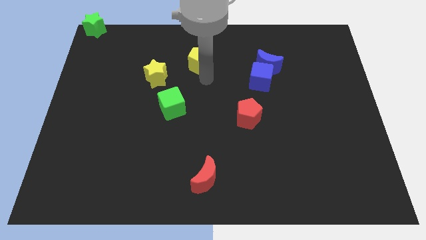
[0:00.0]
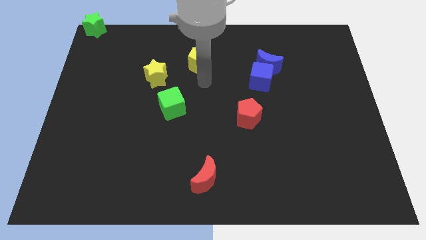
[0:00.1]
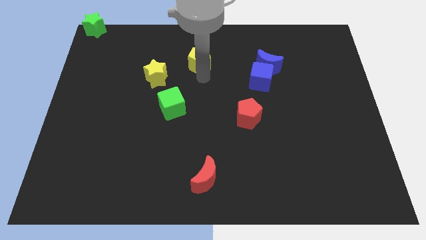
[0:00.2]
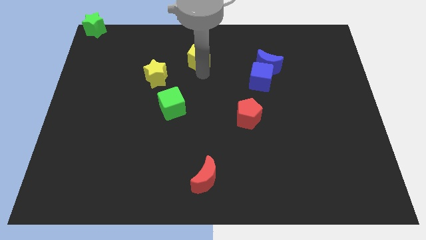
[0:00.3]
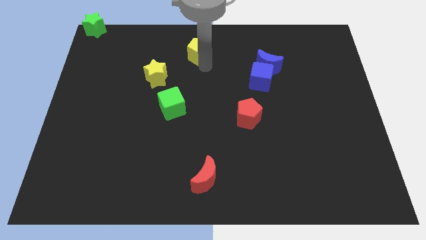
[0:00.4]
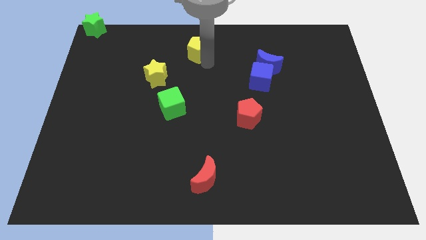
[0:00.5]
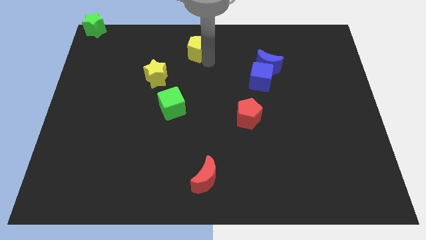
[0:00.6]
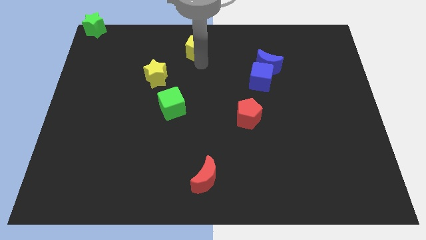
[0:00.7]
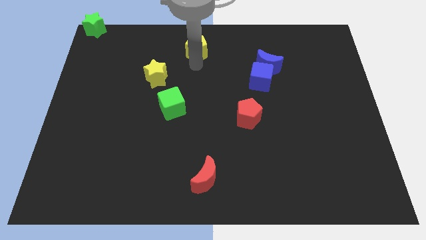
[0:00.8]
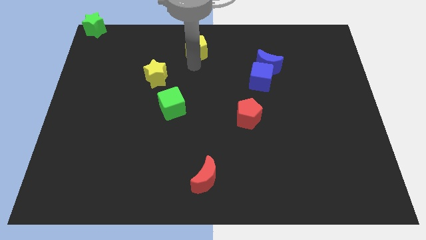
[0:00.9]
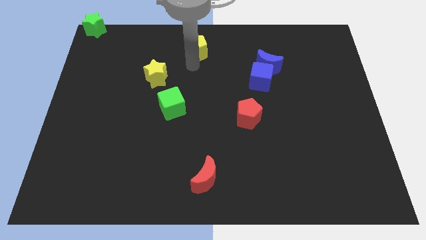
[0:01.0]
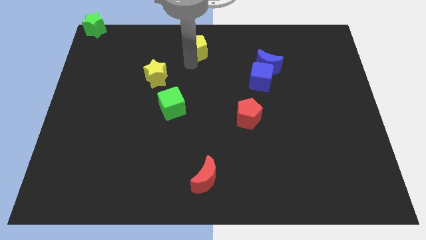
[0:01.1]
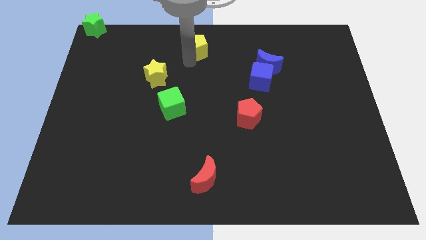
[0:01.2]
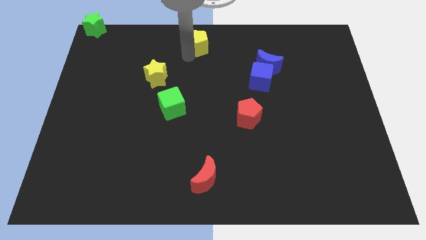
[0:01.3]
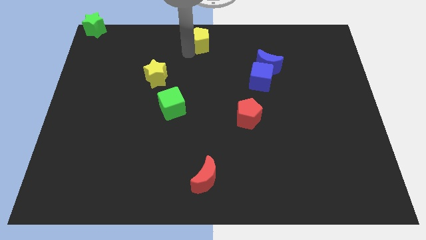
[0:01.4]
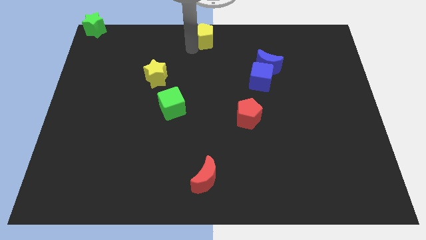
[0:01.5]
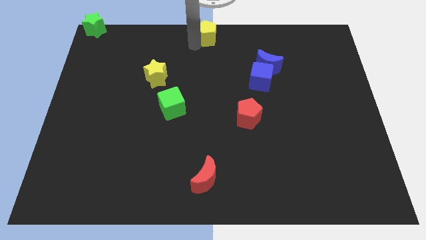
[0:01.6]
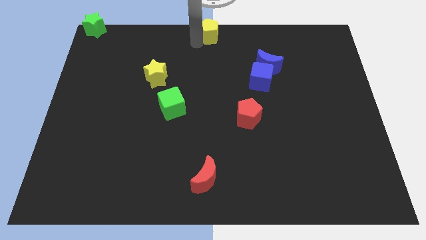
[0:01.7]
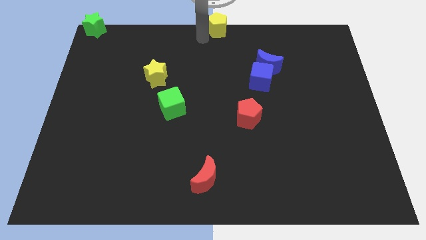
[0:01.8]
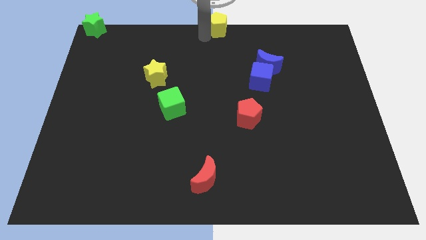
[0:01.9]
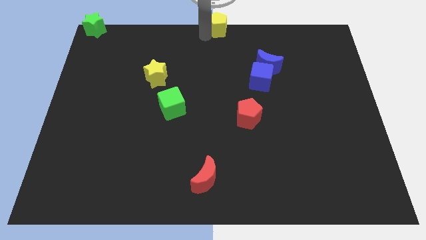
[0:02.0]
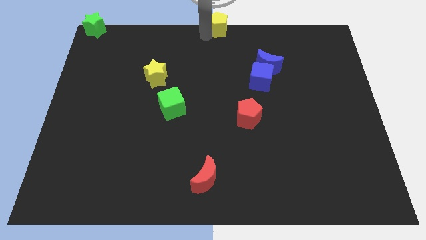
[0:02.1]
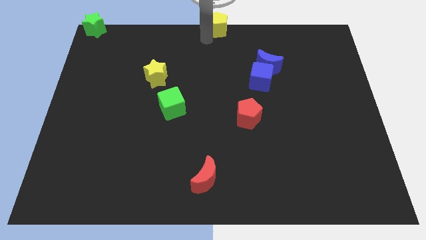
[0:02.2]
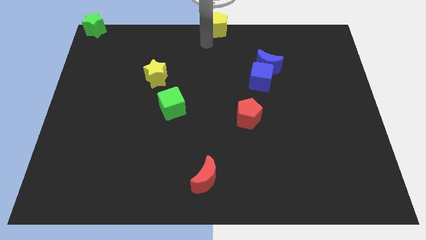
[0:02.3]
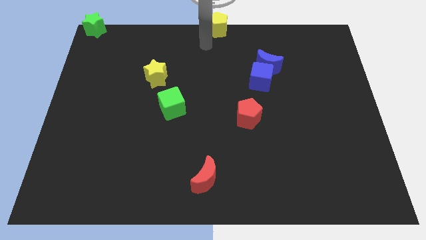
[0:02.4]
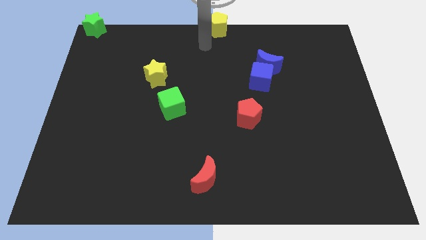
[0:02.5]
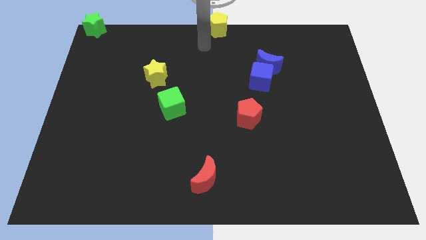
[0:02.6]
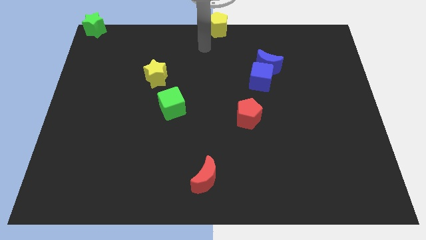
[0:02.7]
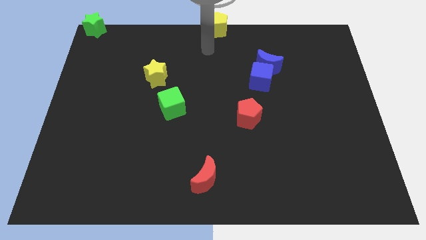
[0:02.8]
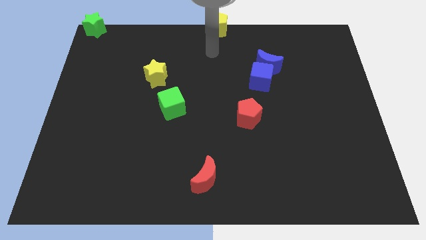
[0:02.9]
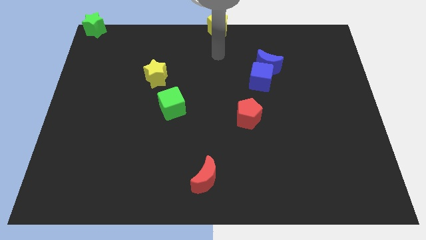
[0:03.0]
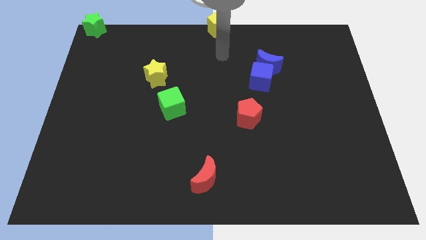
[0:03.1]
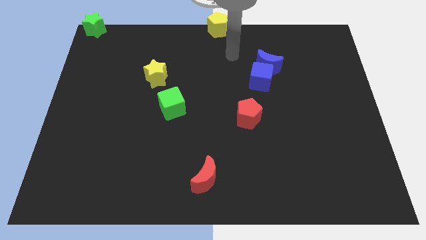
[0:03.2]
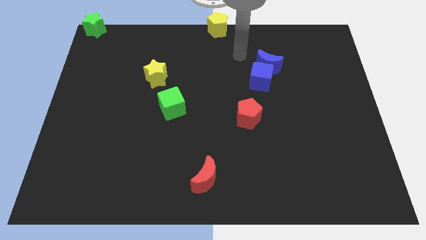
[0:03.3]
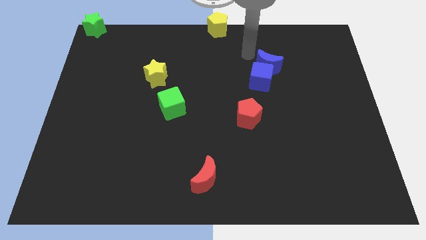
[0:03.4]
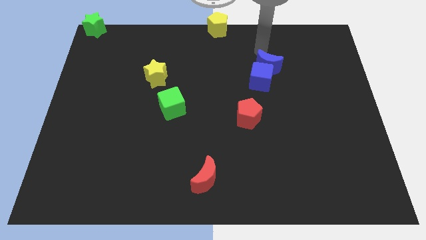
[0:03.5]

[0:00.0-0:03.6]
push the yellow pentagon to the top center of the board

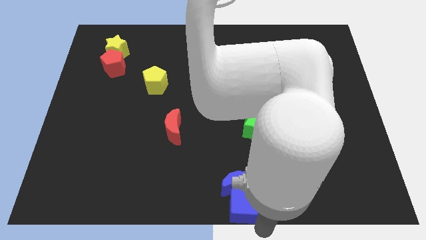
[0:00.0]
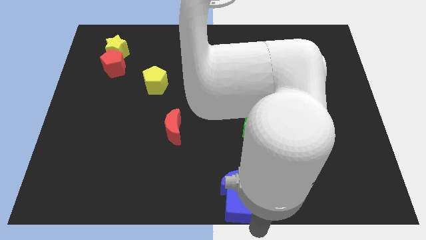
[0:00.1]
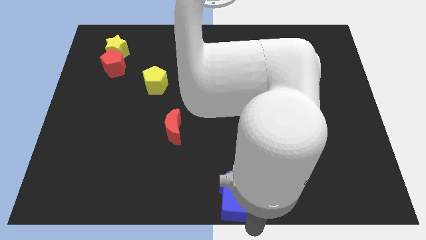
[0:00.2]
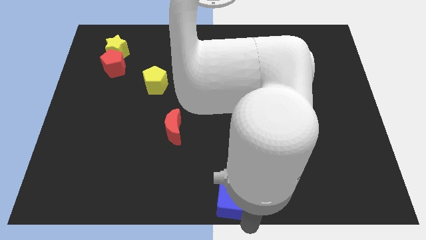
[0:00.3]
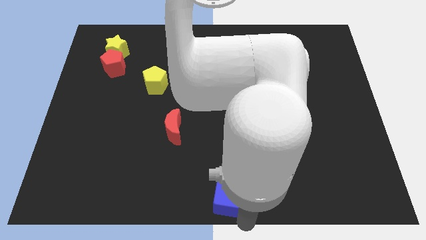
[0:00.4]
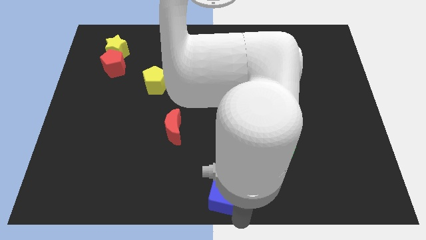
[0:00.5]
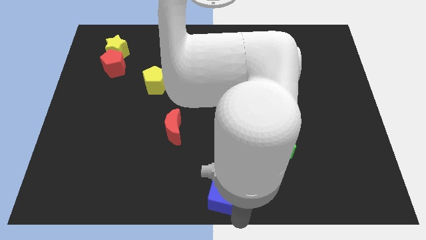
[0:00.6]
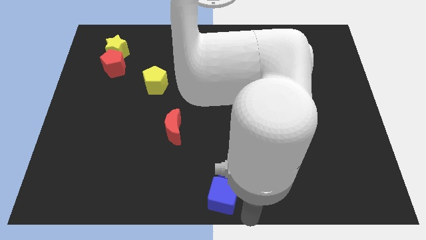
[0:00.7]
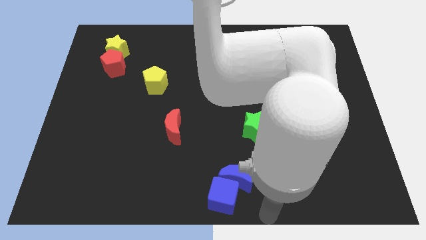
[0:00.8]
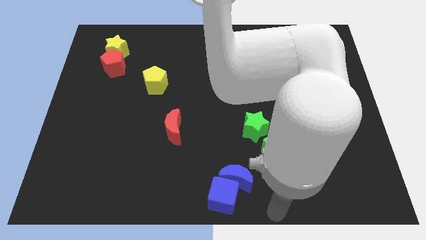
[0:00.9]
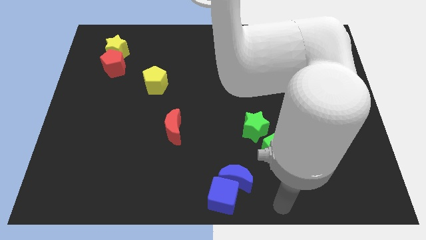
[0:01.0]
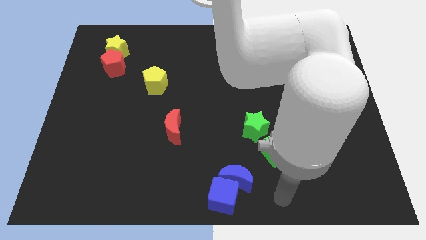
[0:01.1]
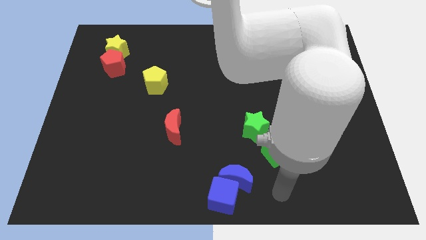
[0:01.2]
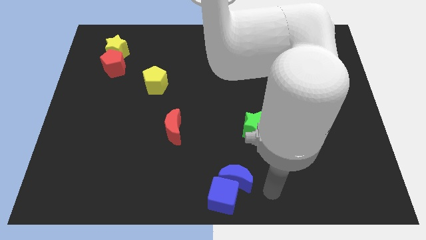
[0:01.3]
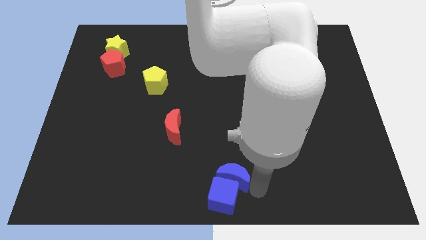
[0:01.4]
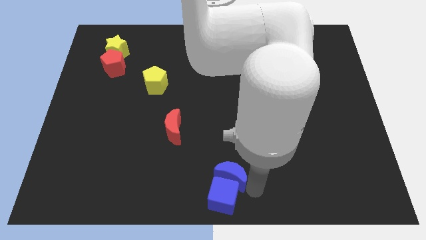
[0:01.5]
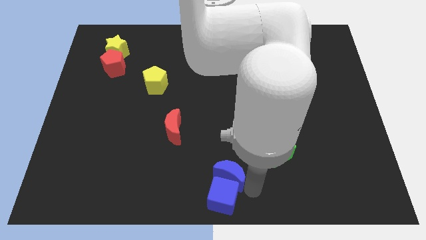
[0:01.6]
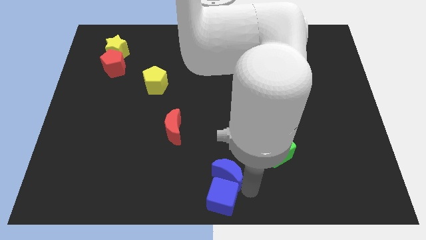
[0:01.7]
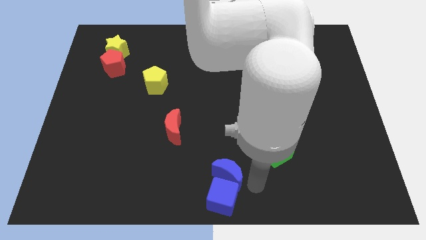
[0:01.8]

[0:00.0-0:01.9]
place the blue crescent close to blue cube

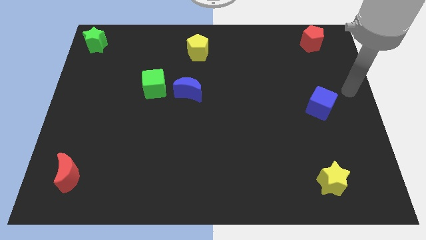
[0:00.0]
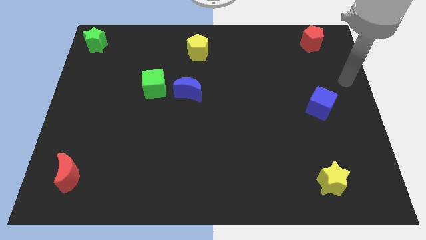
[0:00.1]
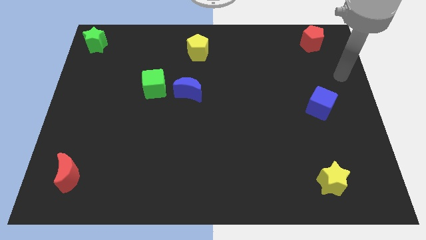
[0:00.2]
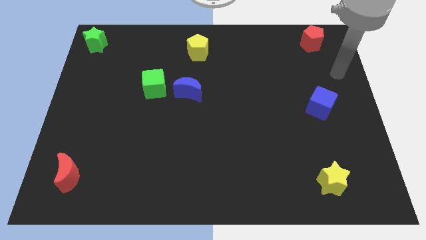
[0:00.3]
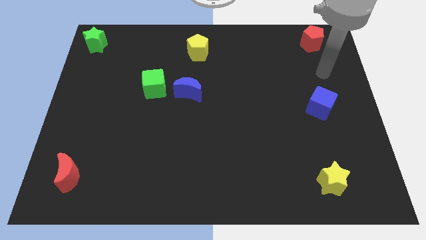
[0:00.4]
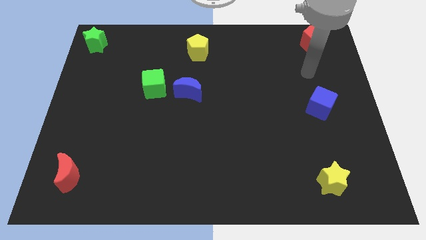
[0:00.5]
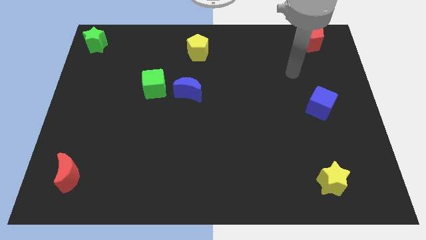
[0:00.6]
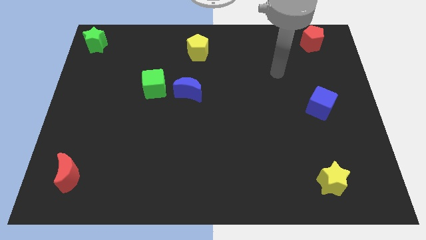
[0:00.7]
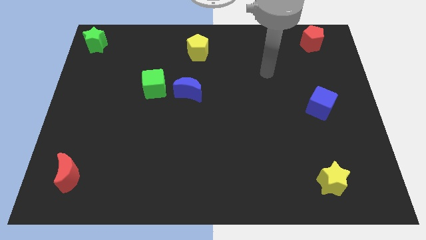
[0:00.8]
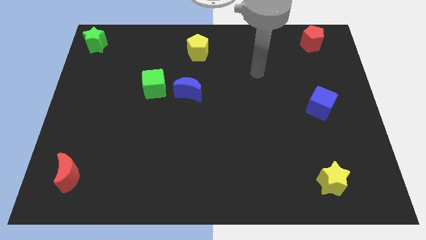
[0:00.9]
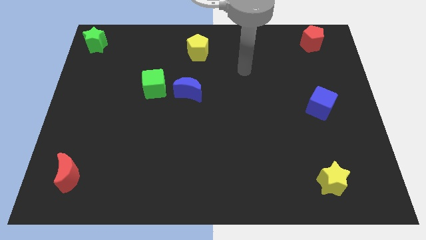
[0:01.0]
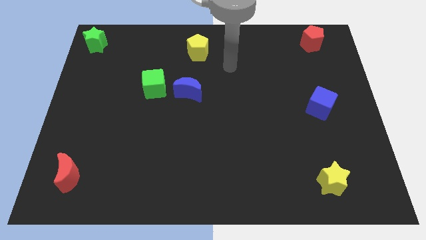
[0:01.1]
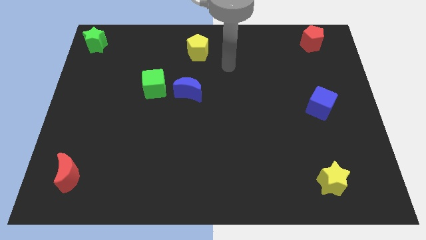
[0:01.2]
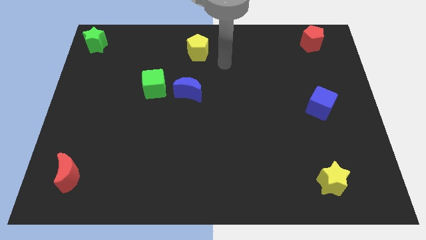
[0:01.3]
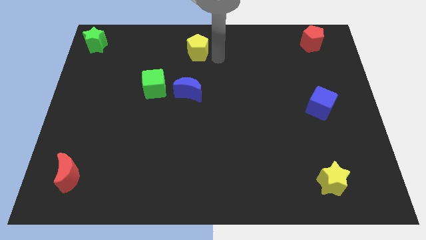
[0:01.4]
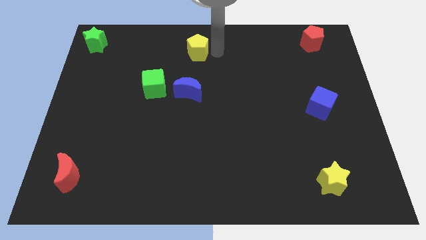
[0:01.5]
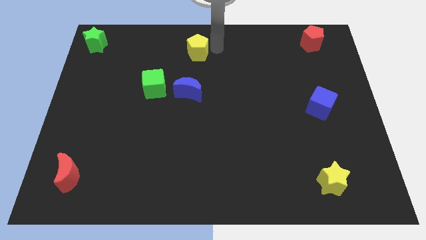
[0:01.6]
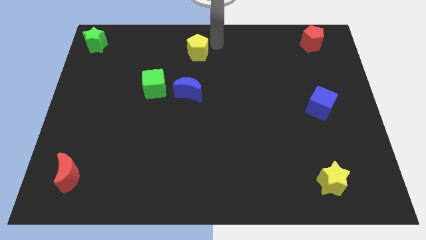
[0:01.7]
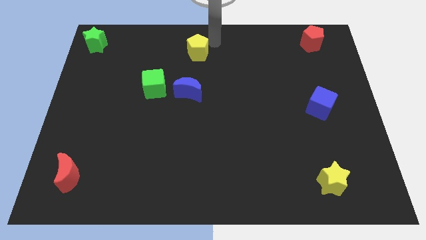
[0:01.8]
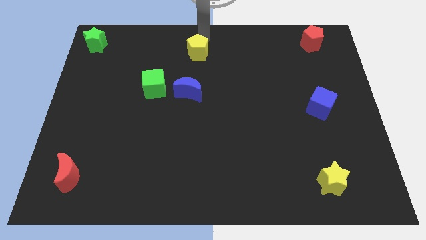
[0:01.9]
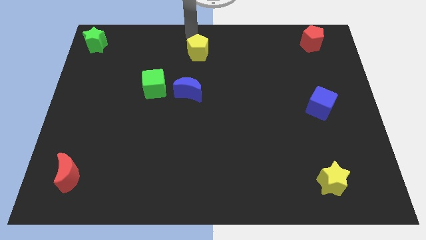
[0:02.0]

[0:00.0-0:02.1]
move your arm above the yellow pentagon

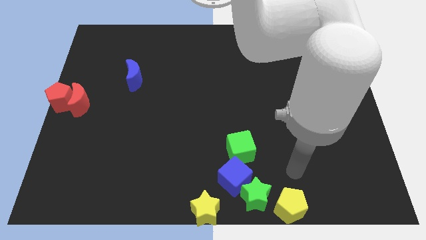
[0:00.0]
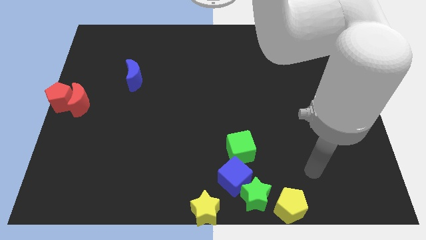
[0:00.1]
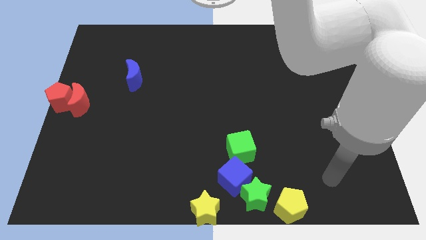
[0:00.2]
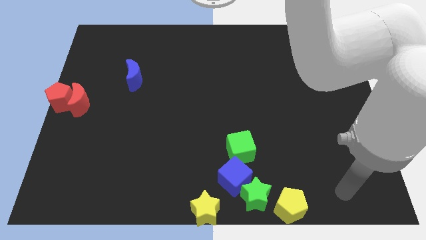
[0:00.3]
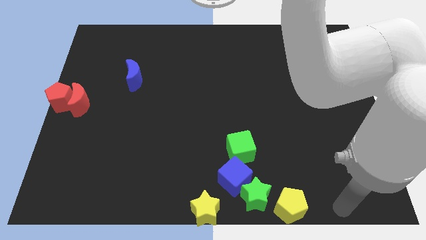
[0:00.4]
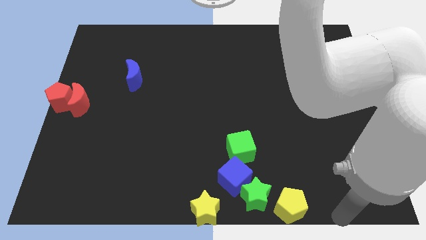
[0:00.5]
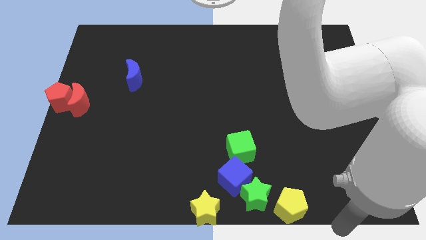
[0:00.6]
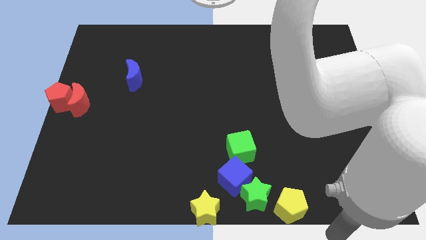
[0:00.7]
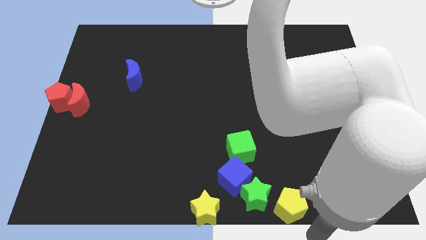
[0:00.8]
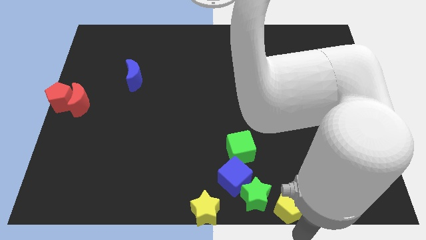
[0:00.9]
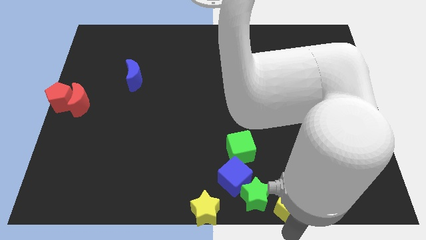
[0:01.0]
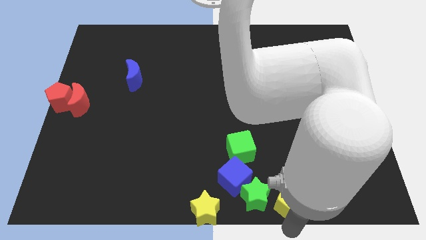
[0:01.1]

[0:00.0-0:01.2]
tap the yellow pentagon

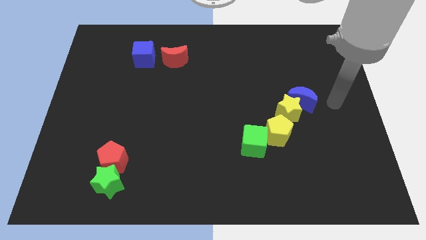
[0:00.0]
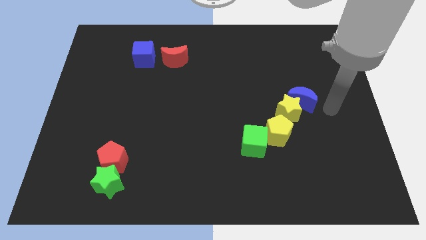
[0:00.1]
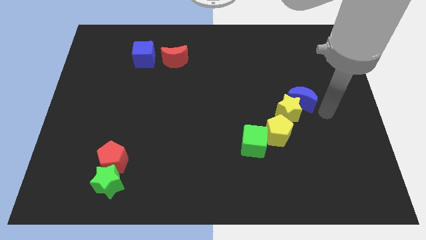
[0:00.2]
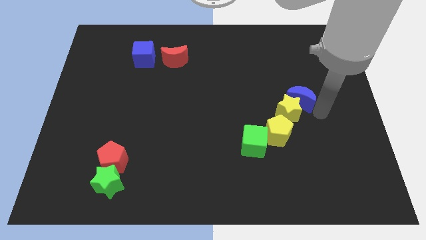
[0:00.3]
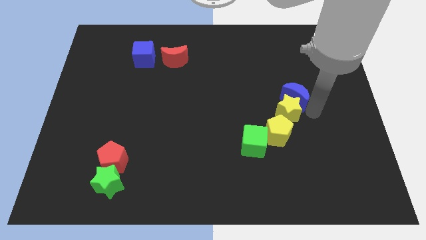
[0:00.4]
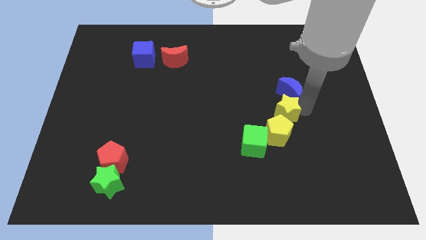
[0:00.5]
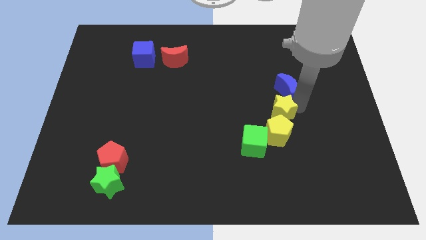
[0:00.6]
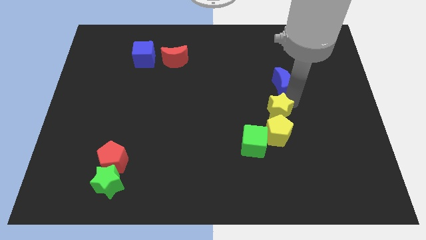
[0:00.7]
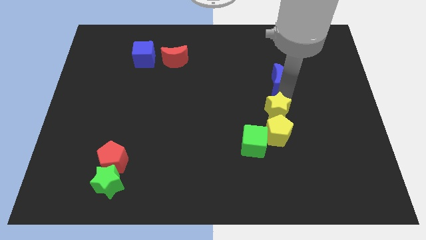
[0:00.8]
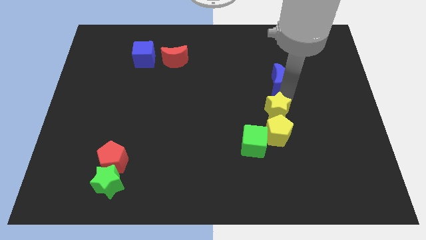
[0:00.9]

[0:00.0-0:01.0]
place blue moon on the top of yellow star
